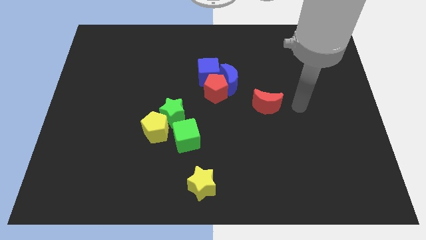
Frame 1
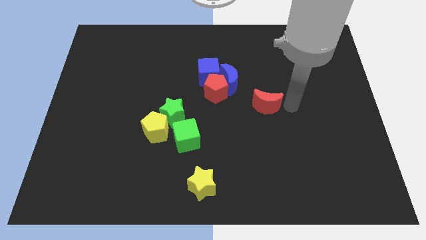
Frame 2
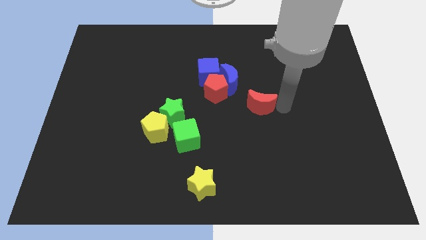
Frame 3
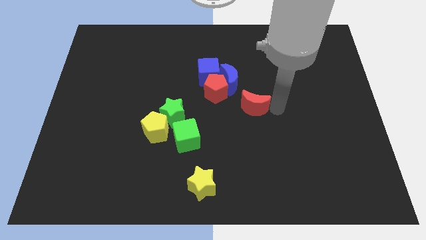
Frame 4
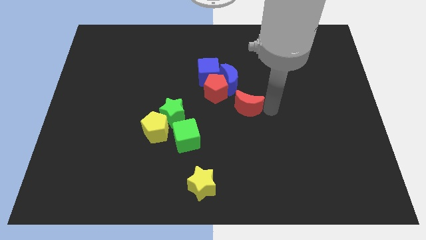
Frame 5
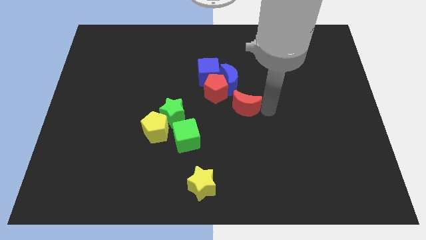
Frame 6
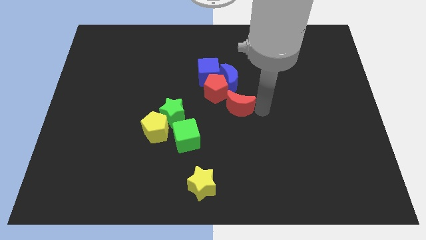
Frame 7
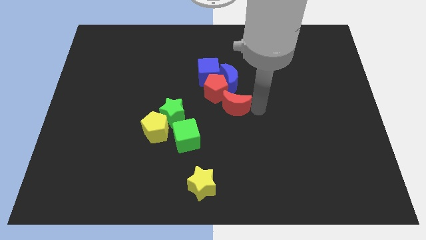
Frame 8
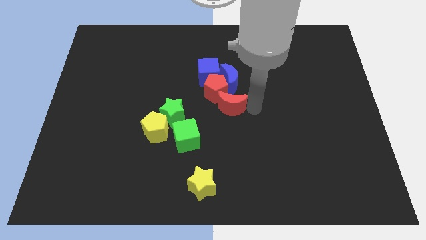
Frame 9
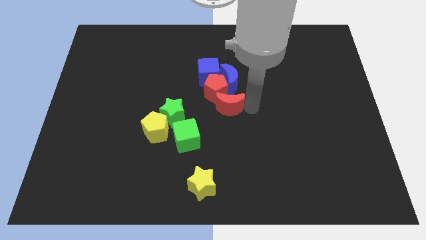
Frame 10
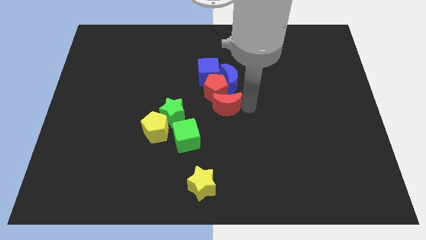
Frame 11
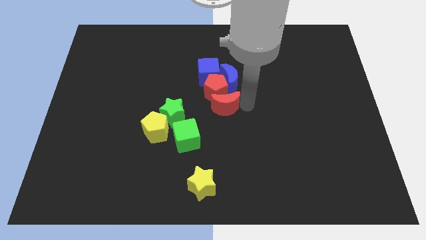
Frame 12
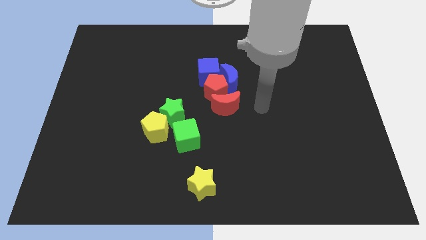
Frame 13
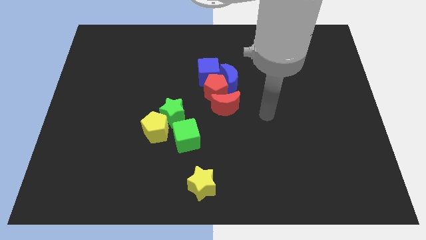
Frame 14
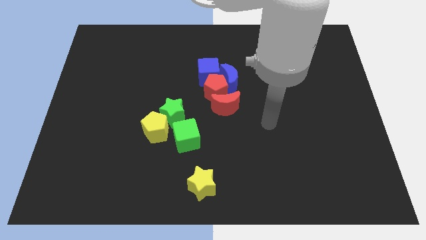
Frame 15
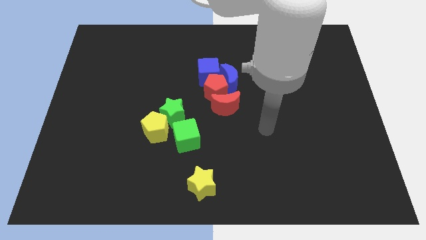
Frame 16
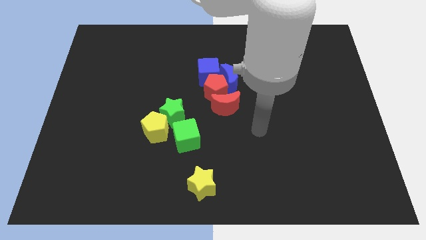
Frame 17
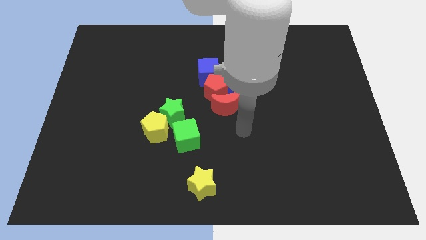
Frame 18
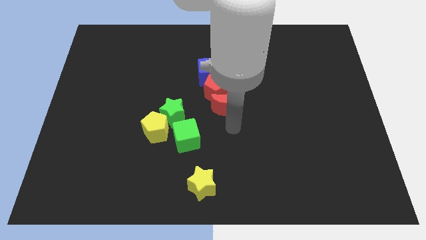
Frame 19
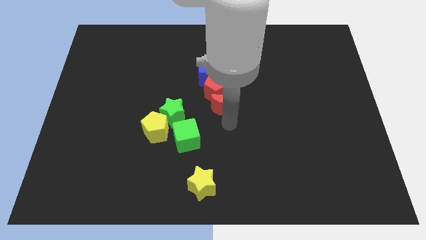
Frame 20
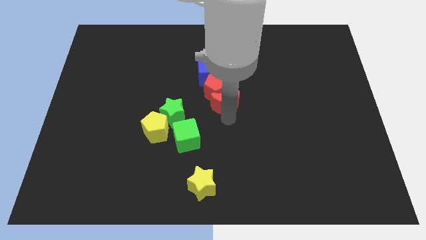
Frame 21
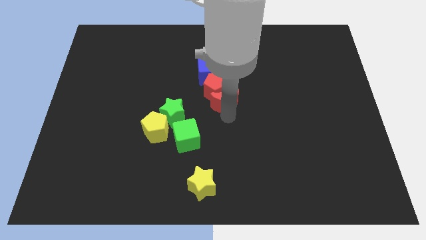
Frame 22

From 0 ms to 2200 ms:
place red moon below red pentagon

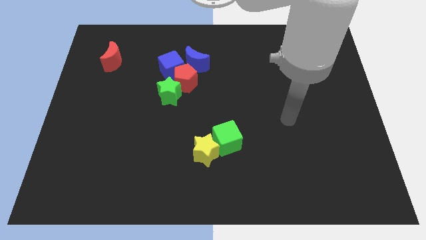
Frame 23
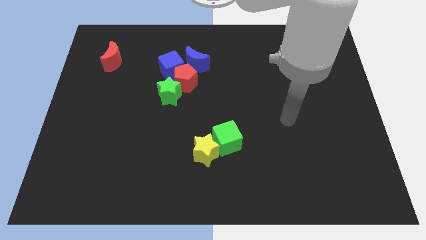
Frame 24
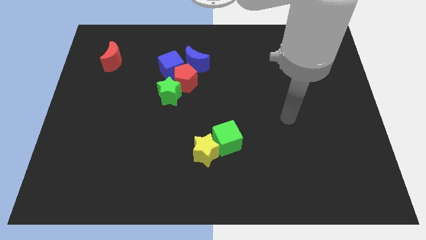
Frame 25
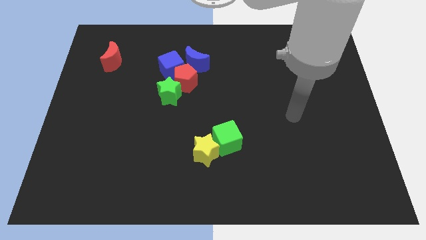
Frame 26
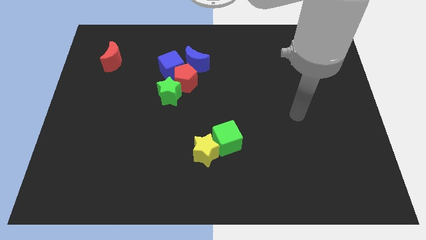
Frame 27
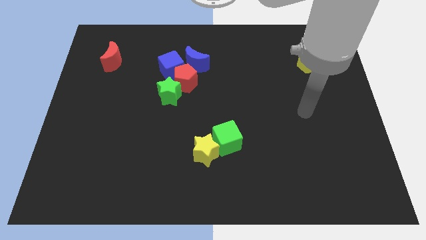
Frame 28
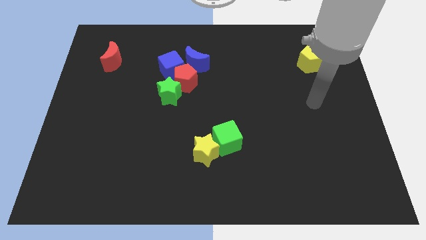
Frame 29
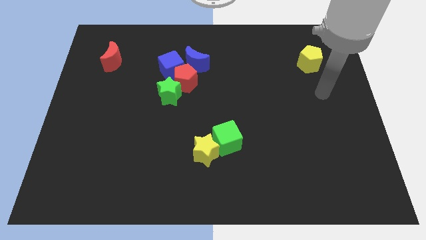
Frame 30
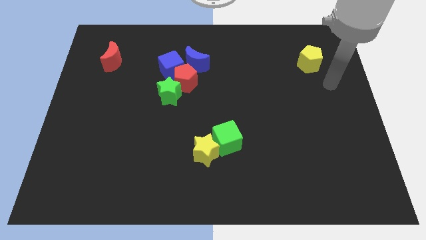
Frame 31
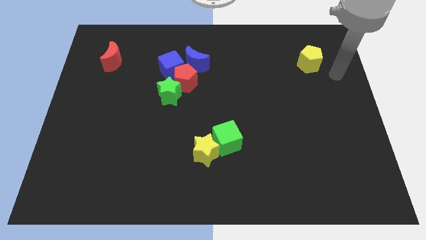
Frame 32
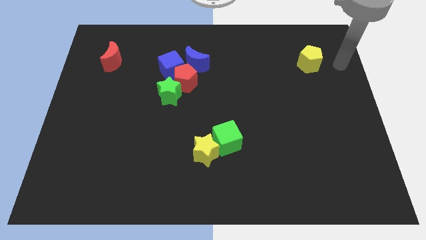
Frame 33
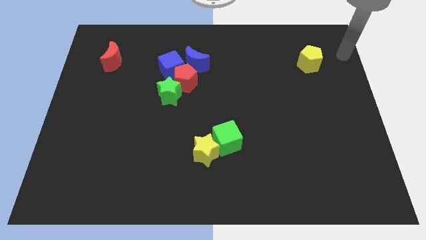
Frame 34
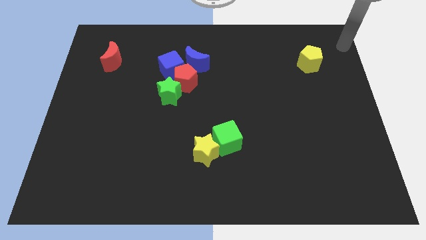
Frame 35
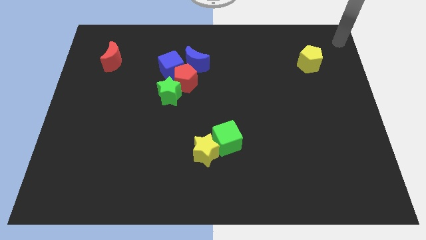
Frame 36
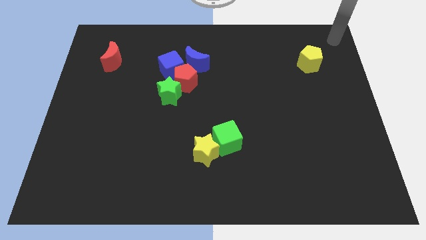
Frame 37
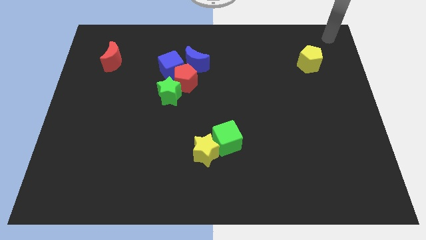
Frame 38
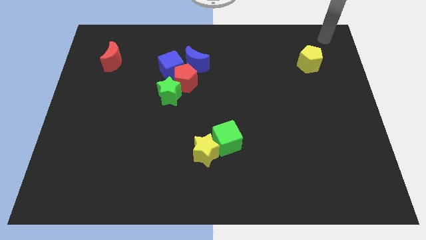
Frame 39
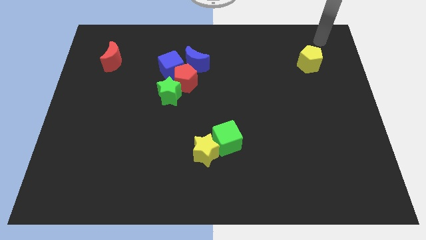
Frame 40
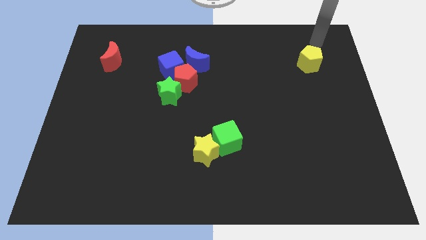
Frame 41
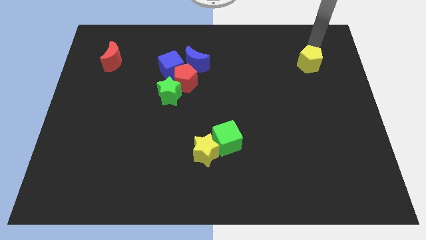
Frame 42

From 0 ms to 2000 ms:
move the arm towards the top of the yellow pentagon

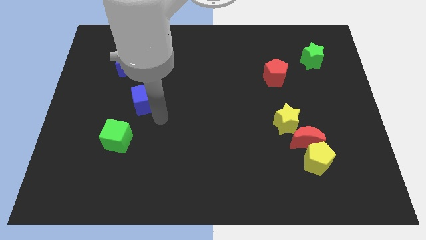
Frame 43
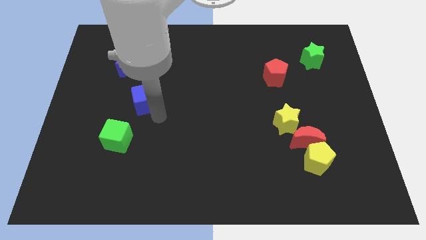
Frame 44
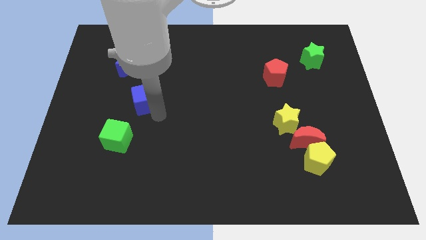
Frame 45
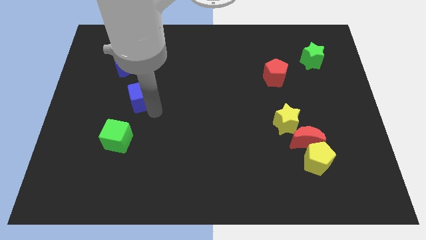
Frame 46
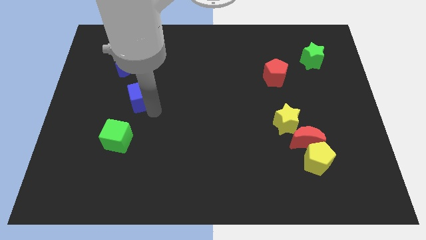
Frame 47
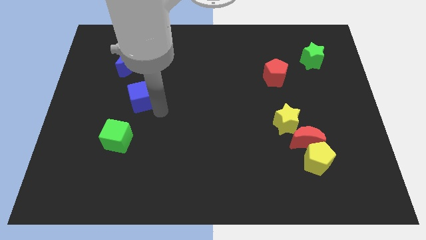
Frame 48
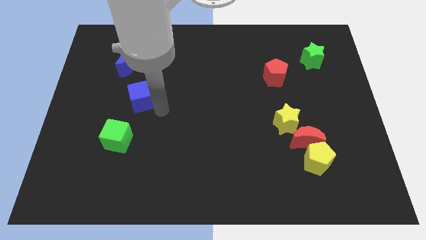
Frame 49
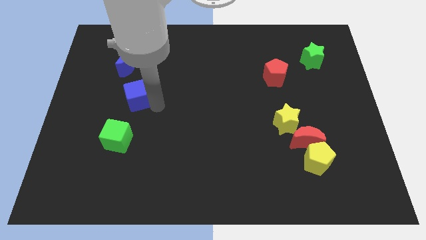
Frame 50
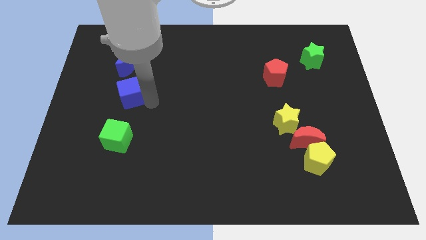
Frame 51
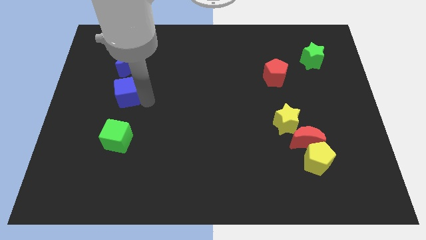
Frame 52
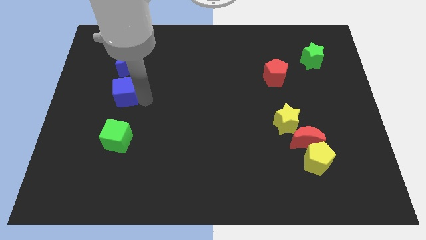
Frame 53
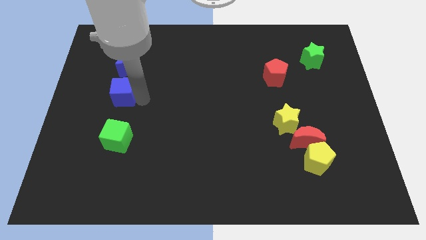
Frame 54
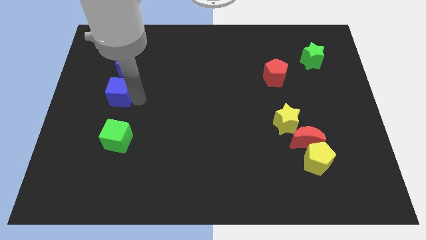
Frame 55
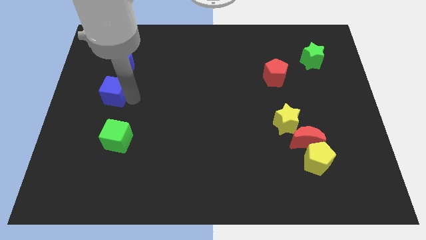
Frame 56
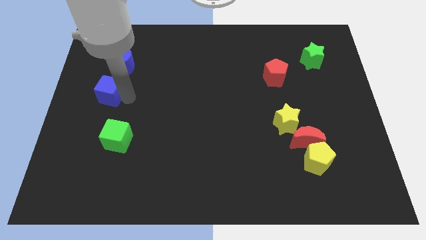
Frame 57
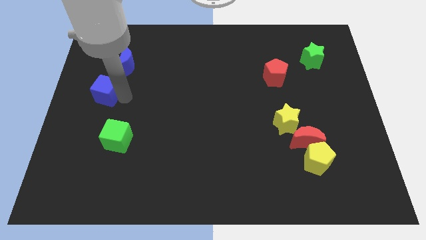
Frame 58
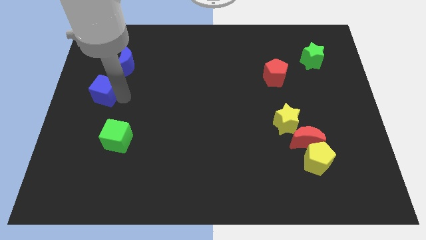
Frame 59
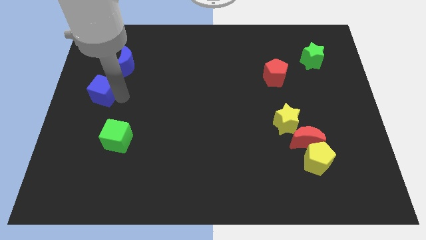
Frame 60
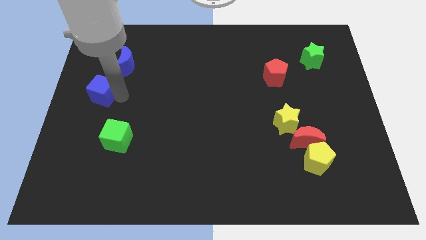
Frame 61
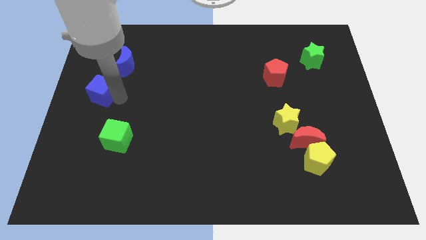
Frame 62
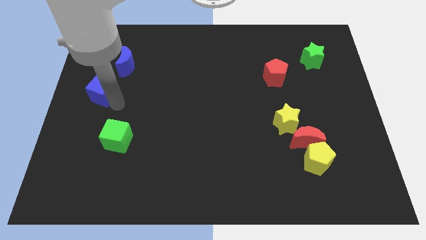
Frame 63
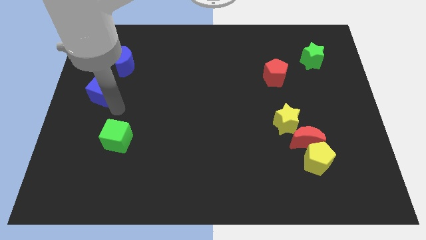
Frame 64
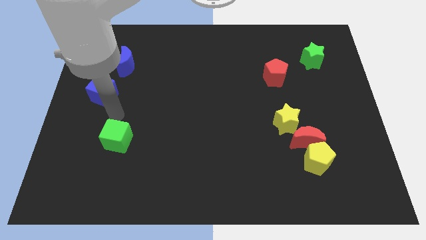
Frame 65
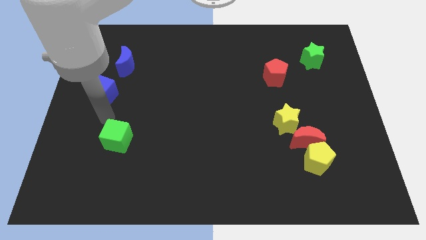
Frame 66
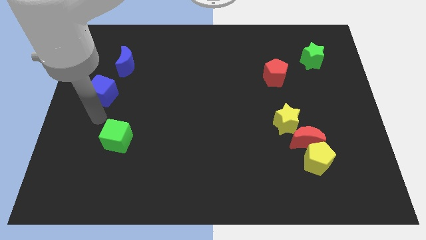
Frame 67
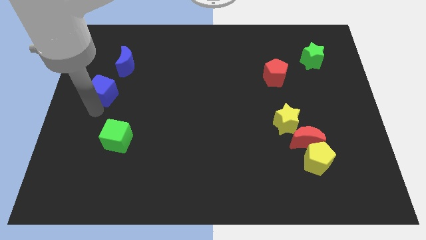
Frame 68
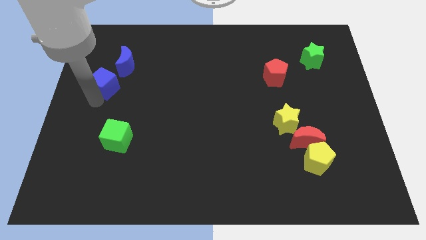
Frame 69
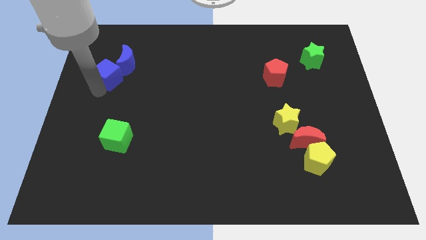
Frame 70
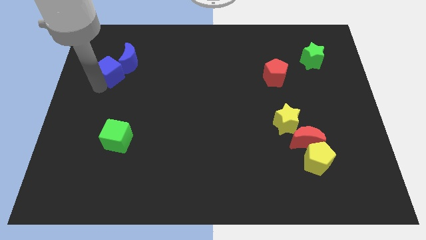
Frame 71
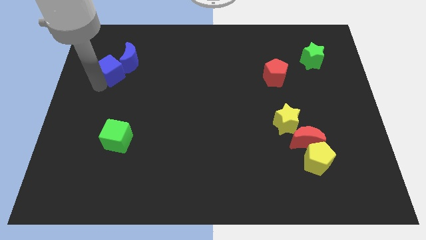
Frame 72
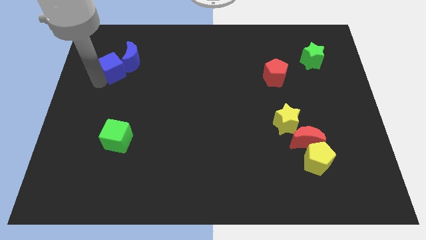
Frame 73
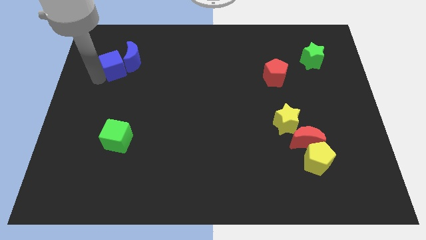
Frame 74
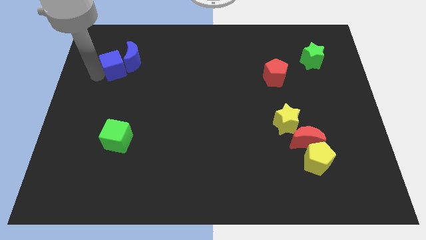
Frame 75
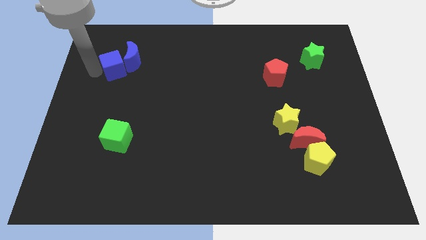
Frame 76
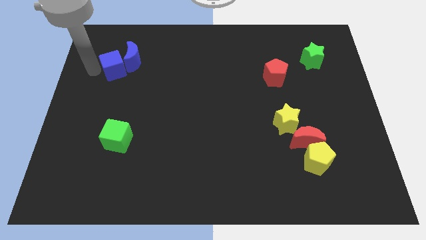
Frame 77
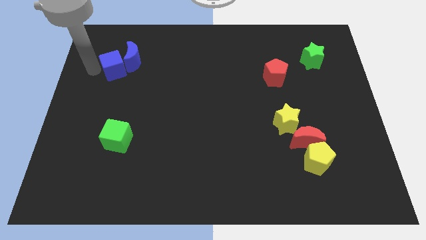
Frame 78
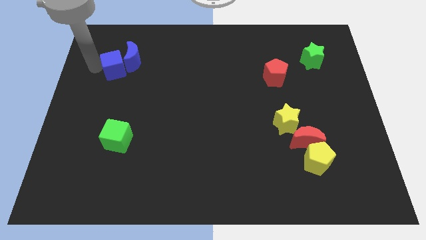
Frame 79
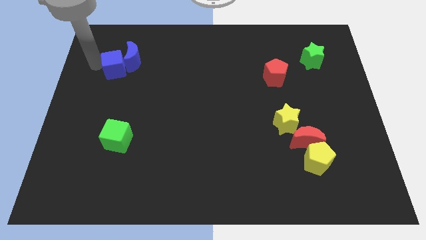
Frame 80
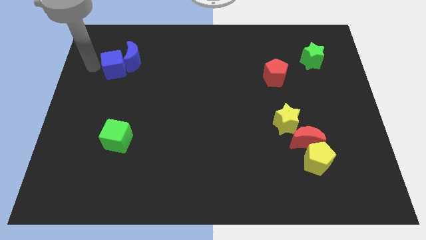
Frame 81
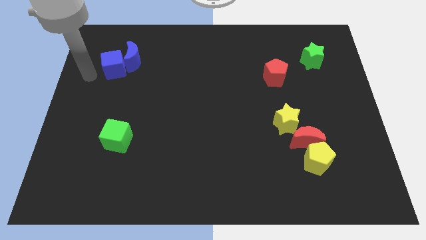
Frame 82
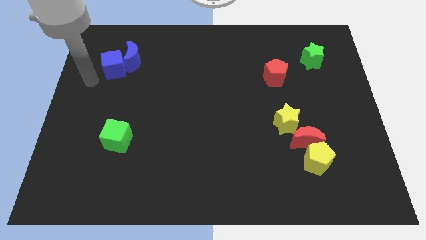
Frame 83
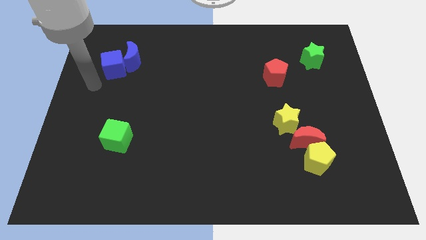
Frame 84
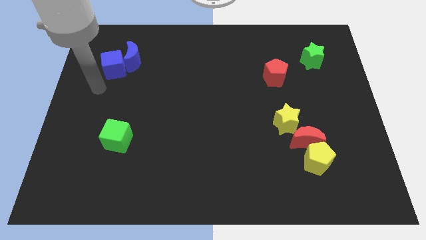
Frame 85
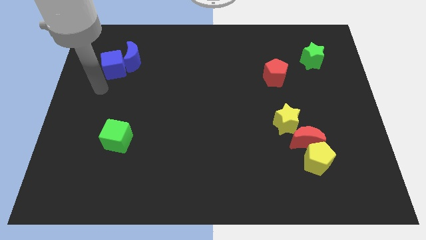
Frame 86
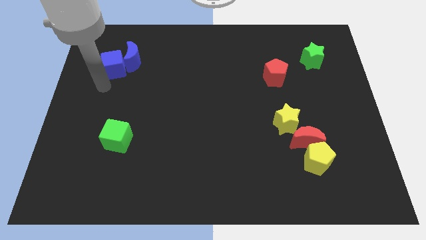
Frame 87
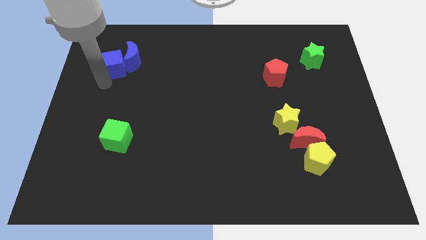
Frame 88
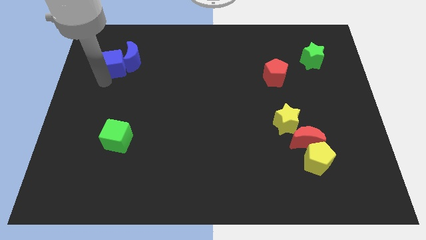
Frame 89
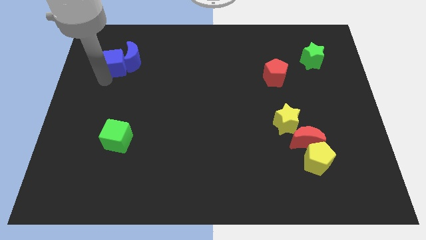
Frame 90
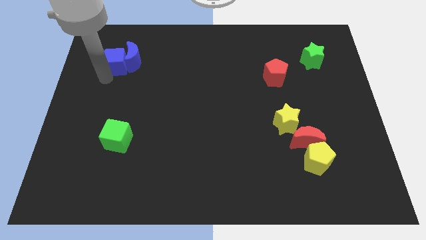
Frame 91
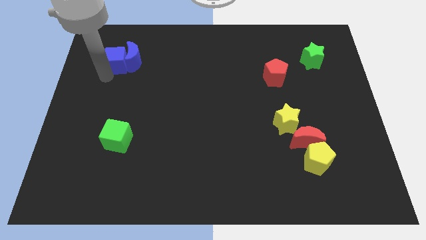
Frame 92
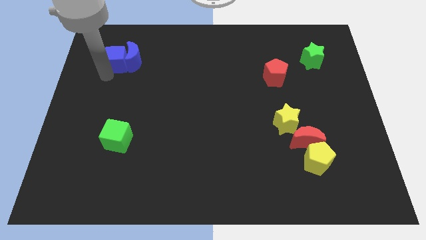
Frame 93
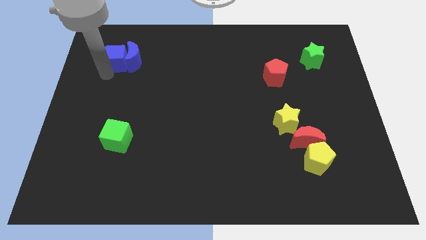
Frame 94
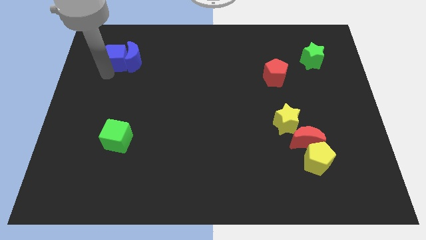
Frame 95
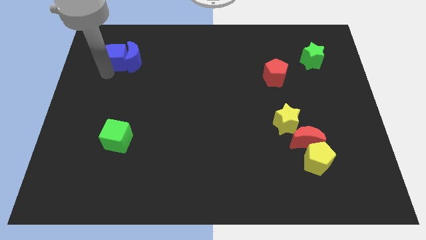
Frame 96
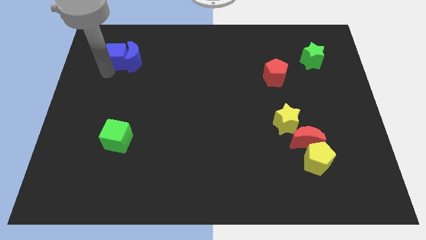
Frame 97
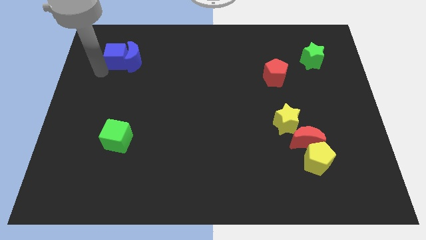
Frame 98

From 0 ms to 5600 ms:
put the blue cube to the left side of blue crescent
